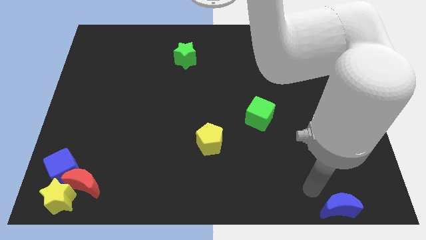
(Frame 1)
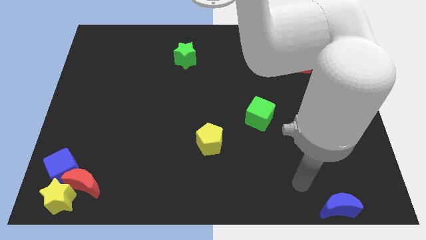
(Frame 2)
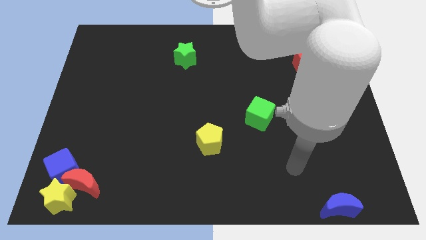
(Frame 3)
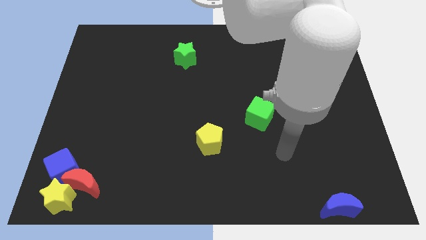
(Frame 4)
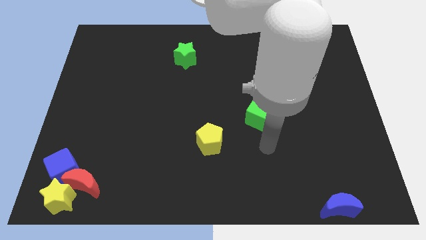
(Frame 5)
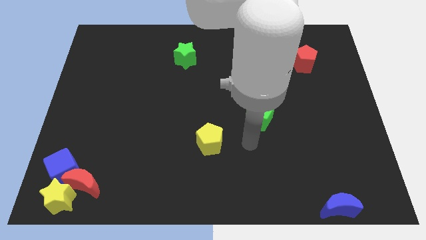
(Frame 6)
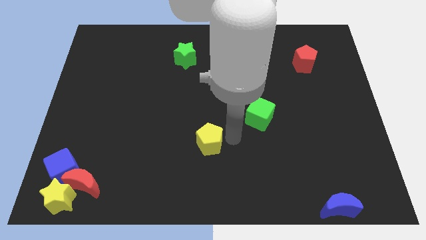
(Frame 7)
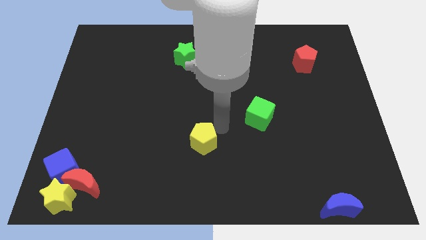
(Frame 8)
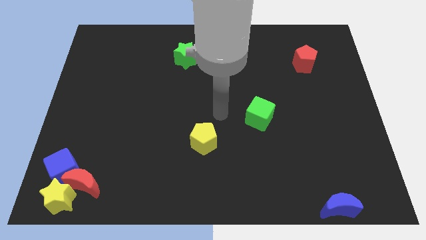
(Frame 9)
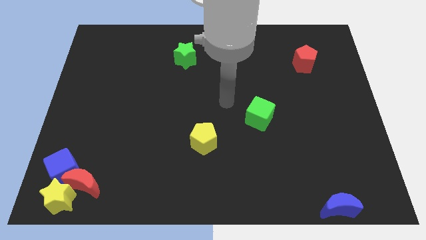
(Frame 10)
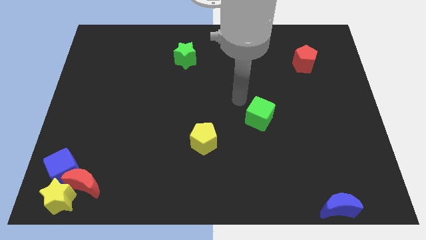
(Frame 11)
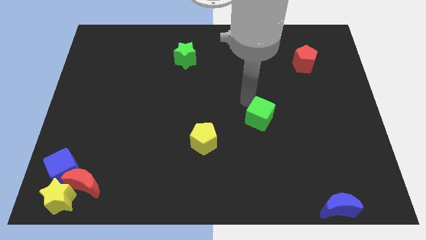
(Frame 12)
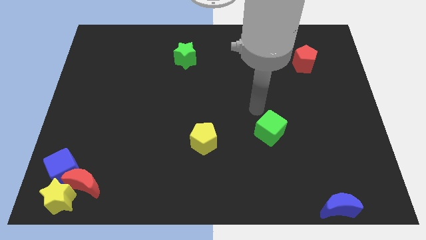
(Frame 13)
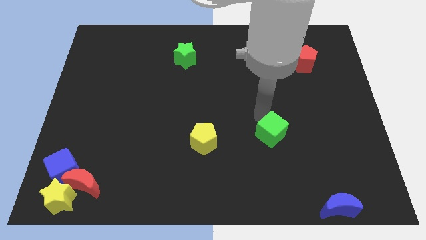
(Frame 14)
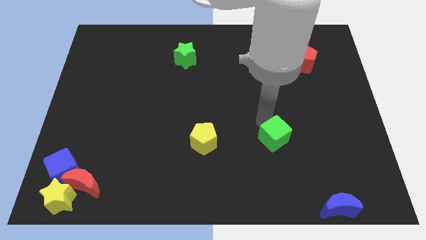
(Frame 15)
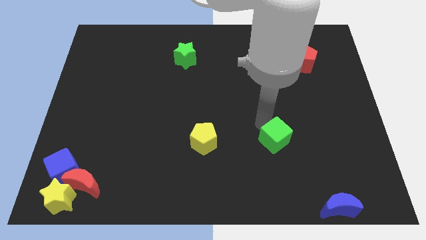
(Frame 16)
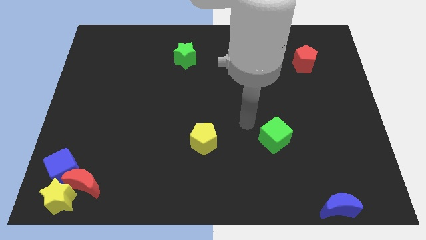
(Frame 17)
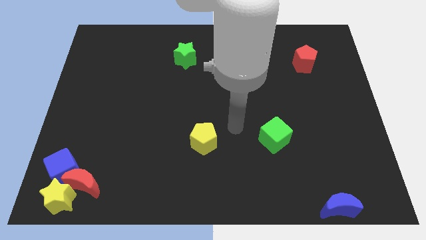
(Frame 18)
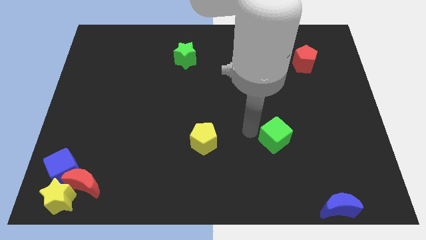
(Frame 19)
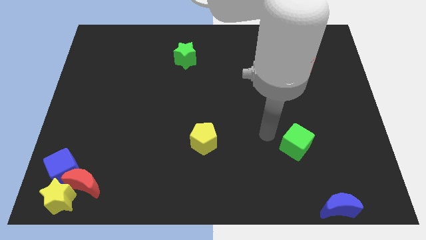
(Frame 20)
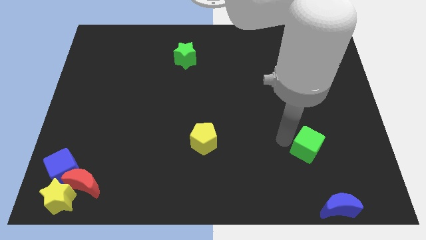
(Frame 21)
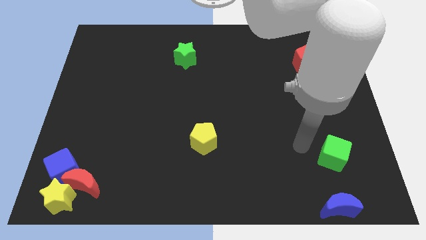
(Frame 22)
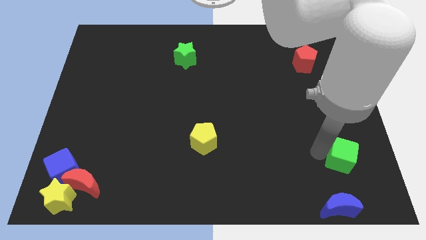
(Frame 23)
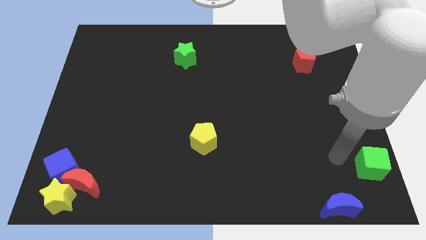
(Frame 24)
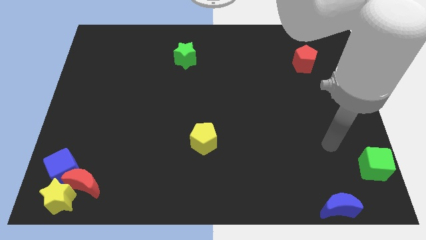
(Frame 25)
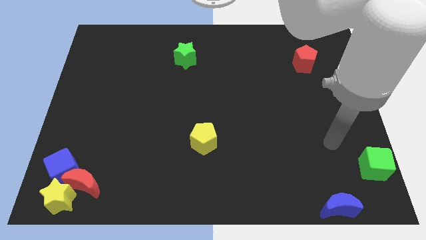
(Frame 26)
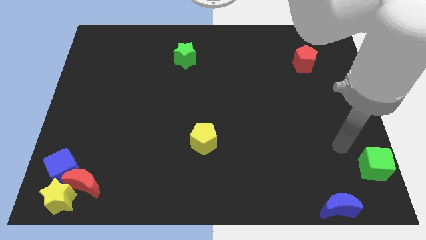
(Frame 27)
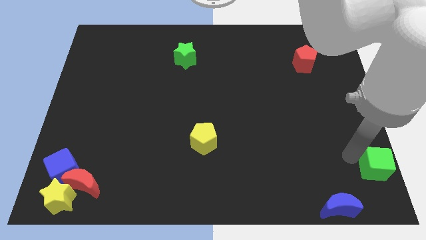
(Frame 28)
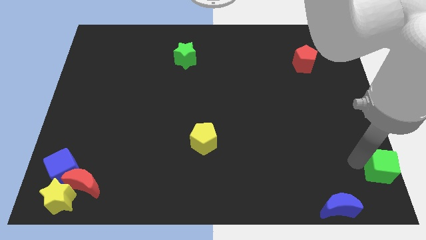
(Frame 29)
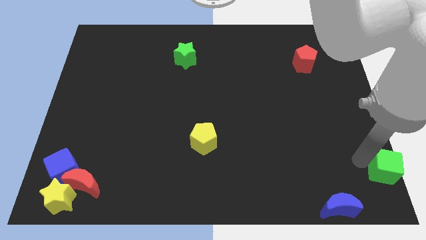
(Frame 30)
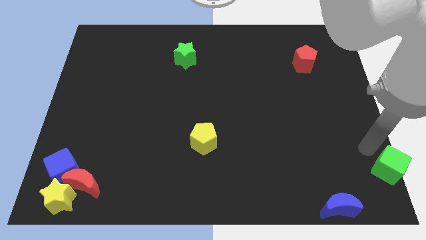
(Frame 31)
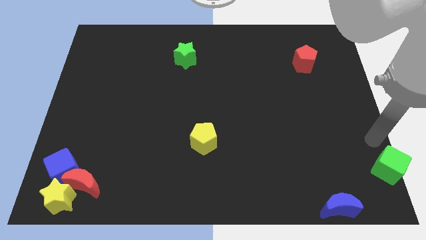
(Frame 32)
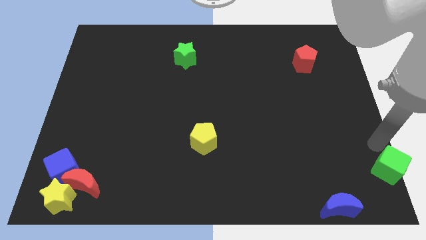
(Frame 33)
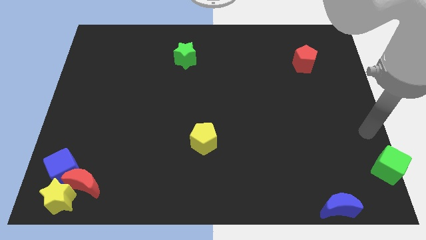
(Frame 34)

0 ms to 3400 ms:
put the green cube diagonally on the top right side of the blue moon

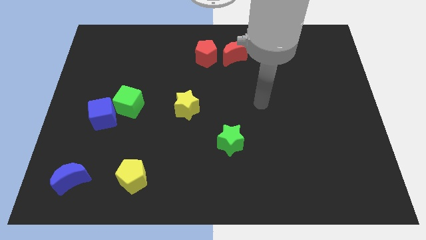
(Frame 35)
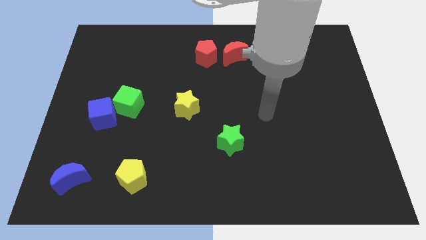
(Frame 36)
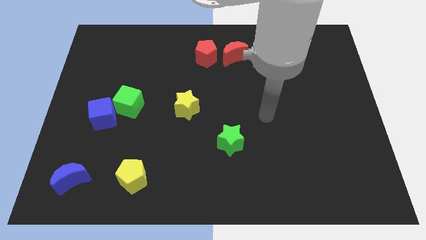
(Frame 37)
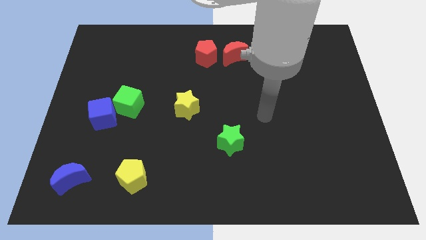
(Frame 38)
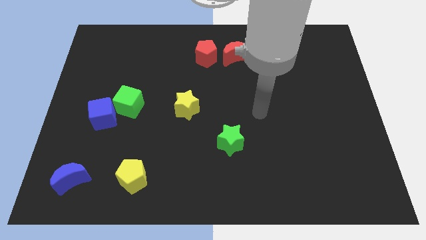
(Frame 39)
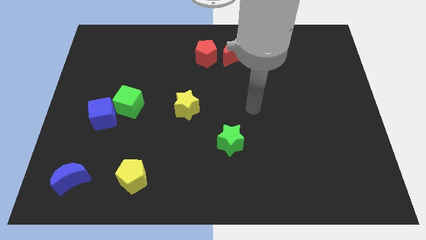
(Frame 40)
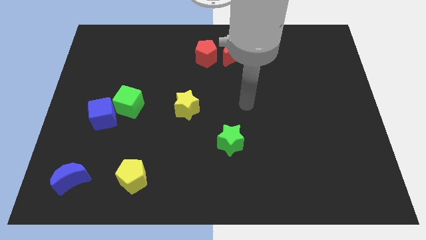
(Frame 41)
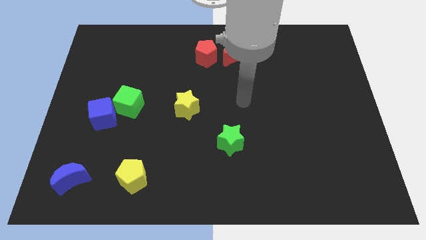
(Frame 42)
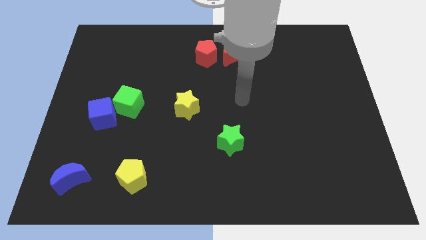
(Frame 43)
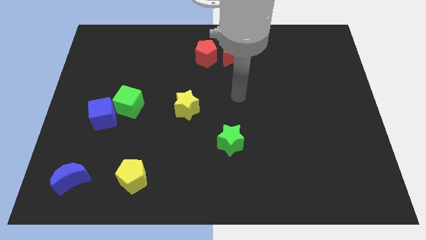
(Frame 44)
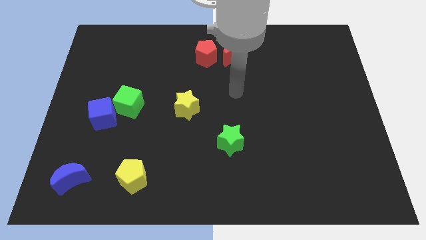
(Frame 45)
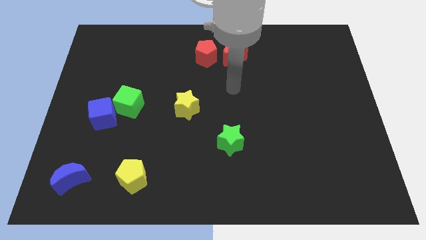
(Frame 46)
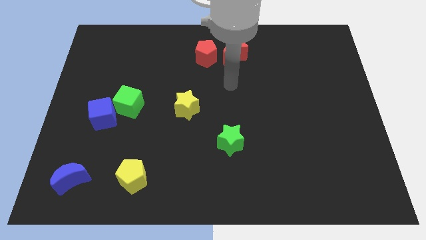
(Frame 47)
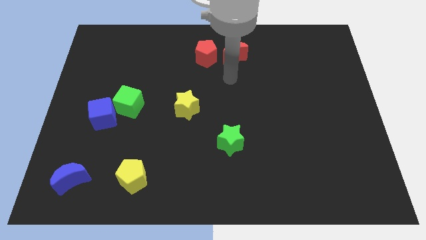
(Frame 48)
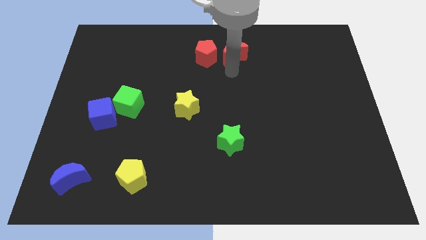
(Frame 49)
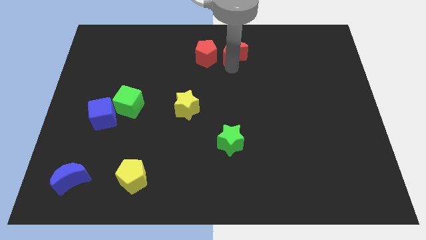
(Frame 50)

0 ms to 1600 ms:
place the arm down to the red moon

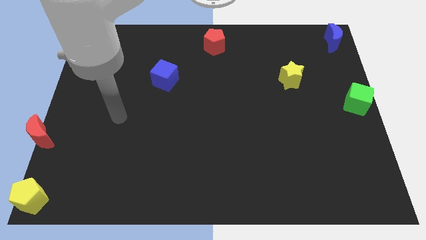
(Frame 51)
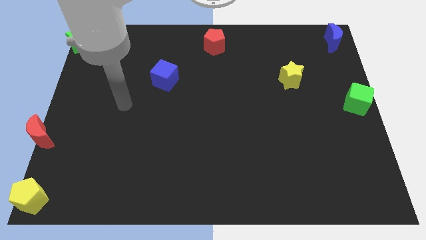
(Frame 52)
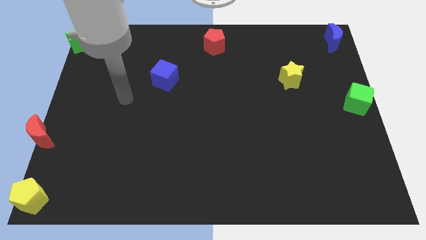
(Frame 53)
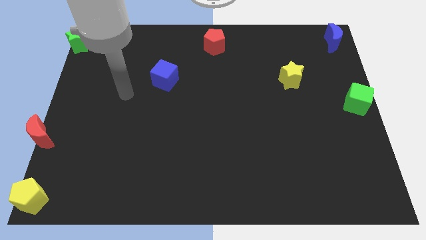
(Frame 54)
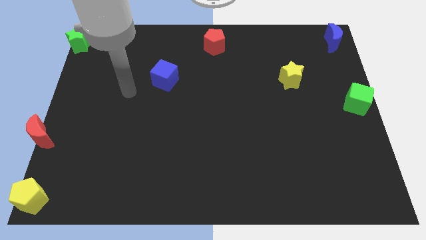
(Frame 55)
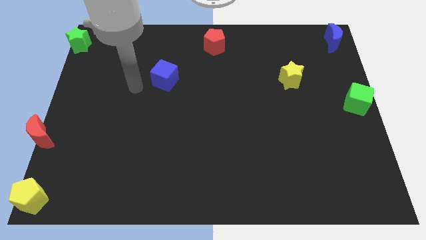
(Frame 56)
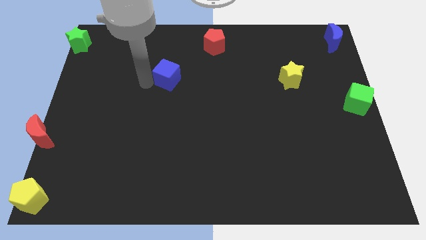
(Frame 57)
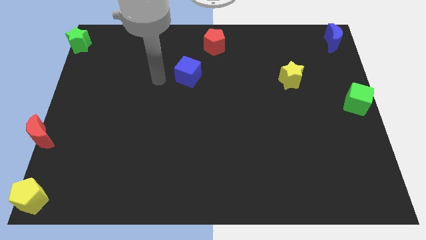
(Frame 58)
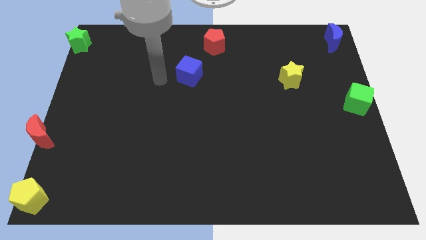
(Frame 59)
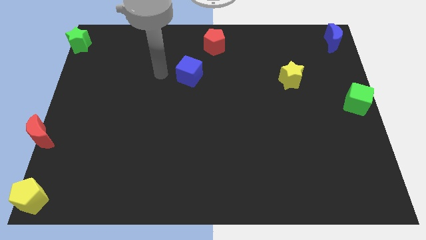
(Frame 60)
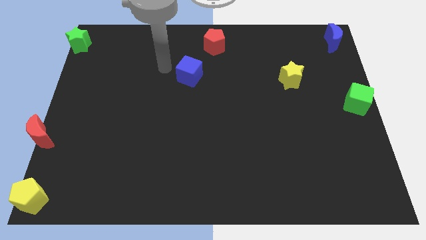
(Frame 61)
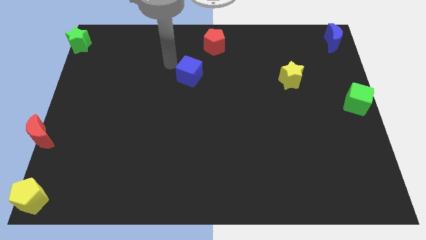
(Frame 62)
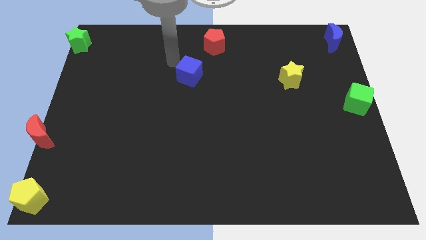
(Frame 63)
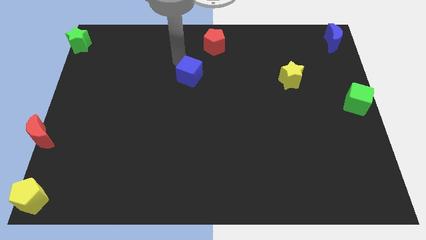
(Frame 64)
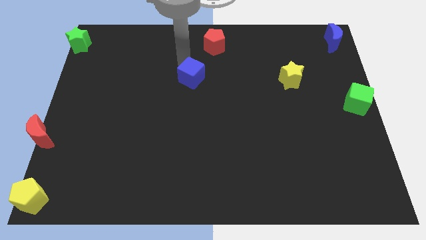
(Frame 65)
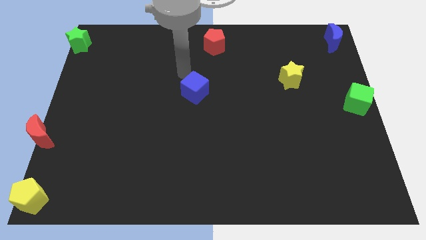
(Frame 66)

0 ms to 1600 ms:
move your arm to the top of the blue cube

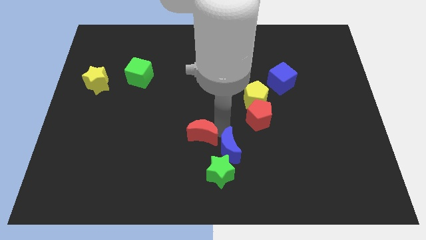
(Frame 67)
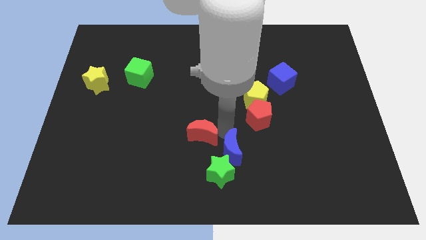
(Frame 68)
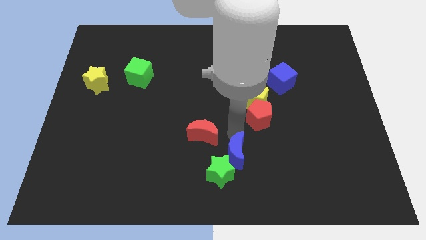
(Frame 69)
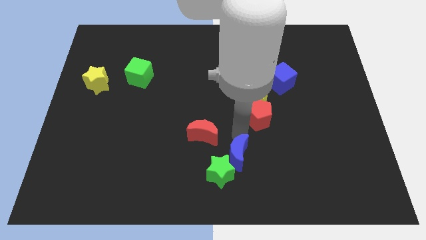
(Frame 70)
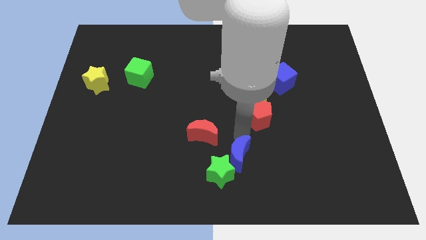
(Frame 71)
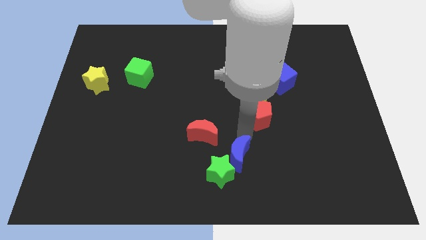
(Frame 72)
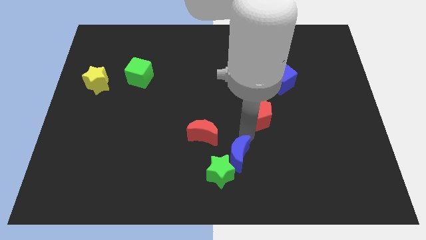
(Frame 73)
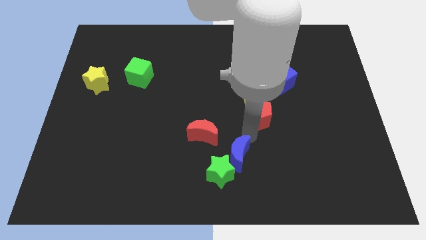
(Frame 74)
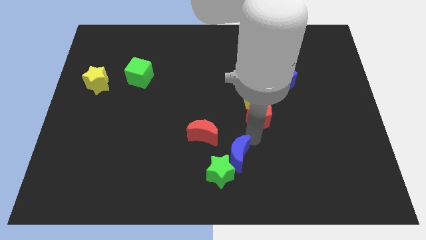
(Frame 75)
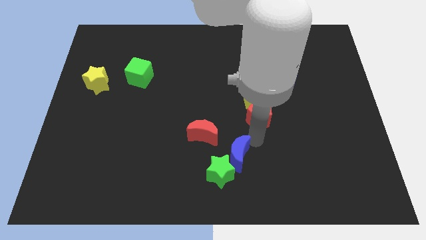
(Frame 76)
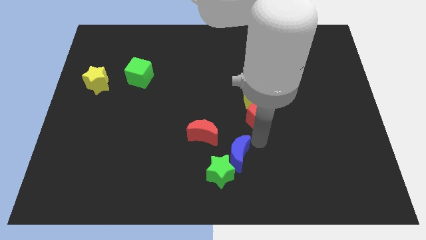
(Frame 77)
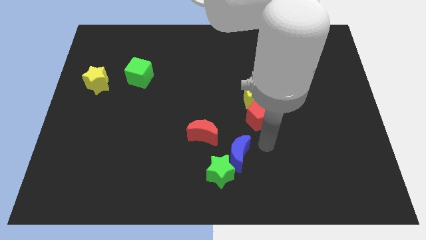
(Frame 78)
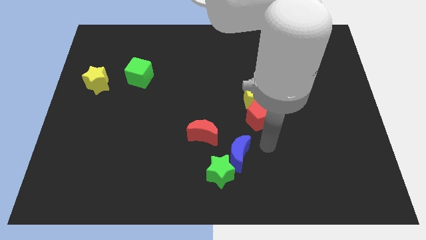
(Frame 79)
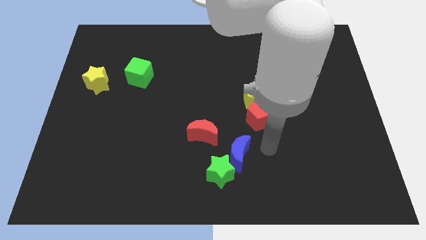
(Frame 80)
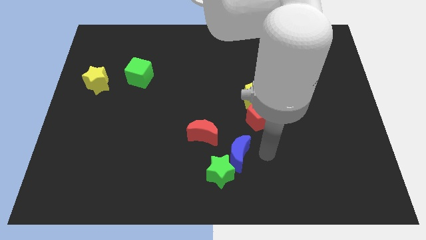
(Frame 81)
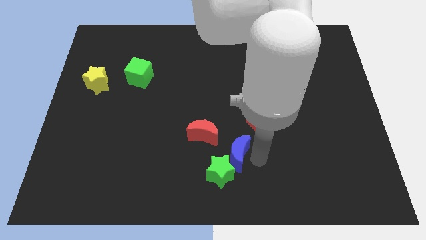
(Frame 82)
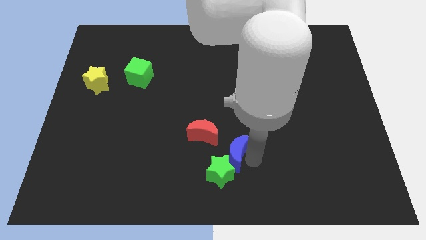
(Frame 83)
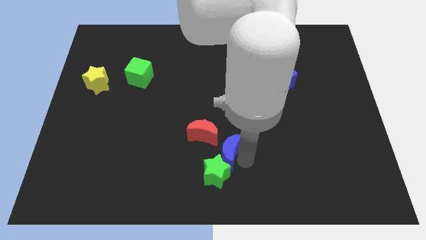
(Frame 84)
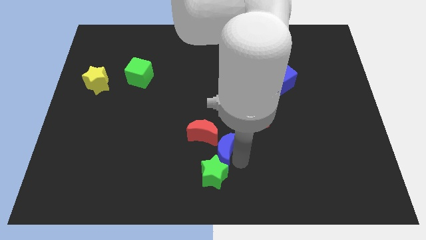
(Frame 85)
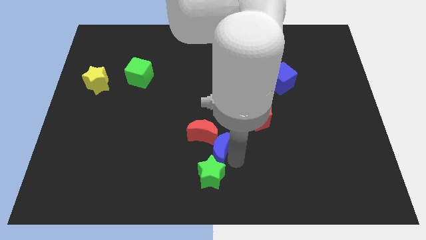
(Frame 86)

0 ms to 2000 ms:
separate red moon and the blue crescent

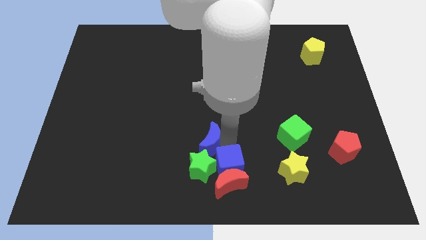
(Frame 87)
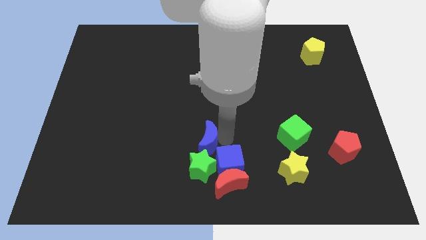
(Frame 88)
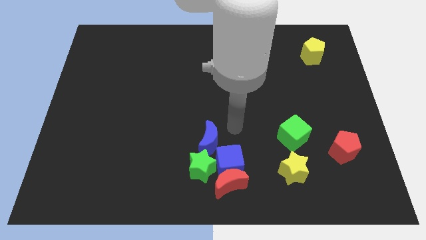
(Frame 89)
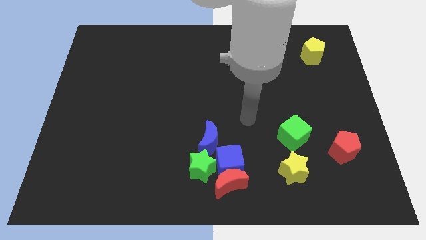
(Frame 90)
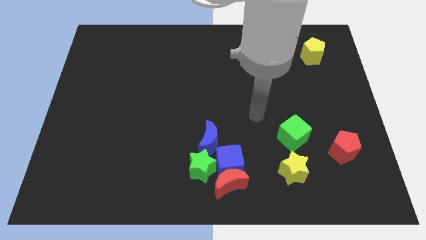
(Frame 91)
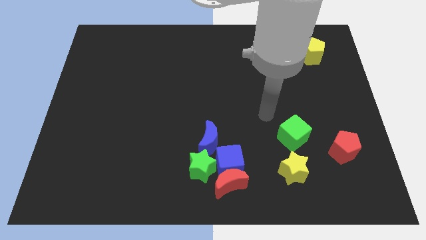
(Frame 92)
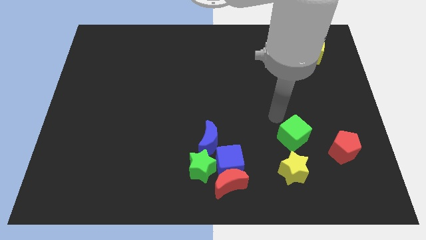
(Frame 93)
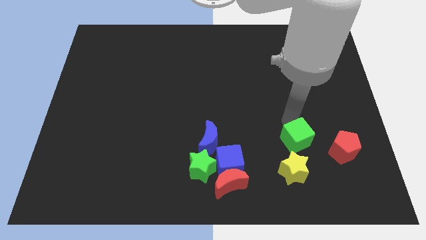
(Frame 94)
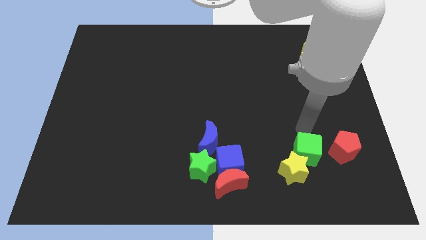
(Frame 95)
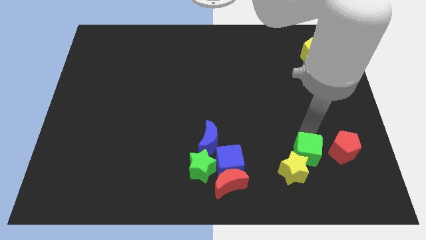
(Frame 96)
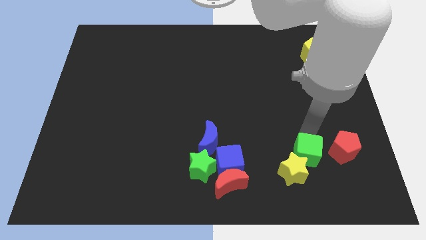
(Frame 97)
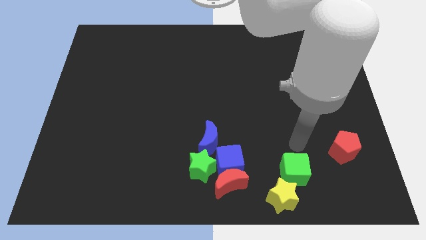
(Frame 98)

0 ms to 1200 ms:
move your arm towards the green cube
